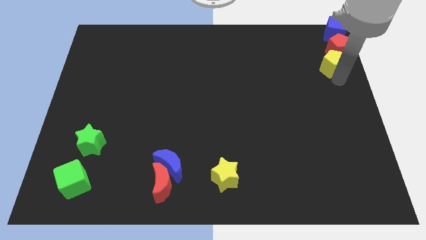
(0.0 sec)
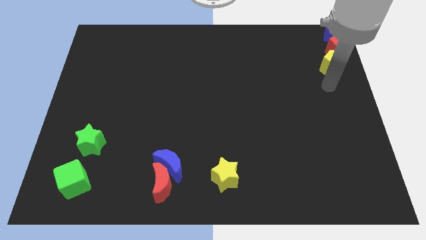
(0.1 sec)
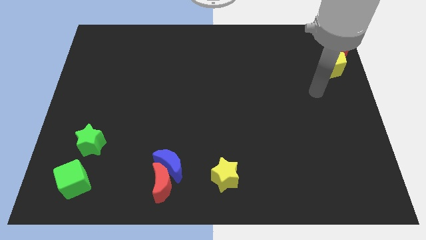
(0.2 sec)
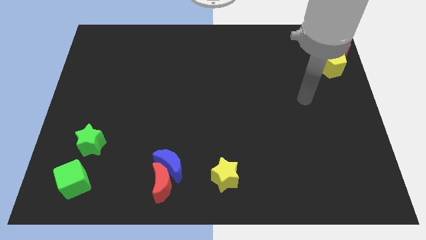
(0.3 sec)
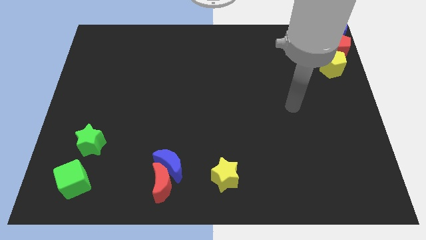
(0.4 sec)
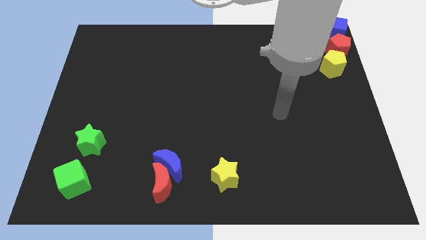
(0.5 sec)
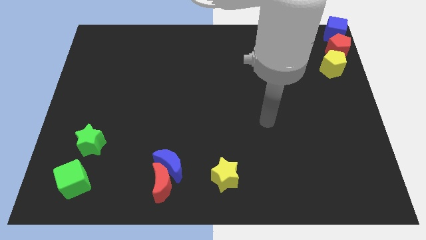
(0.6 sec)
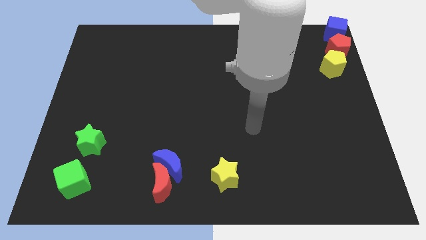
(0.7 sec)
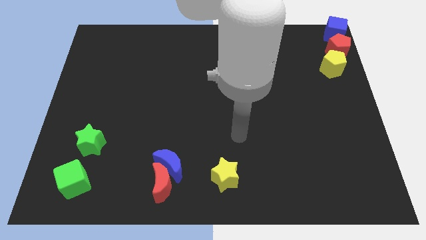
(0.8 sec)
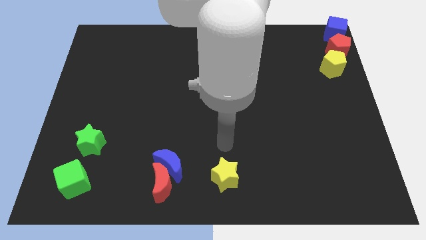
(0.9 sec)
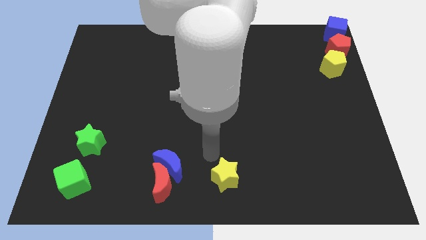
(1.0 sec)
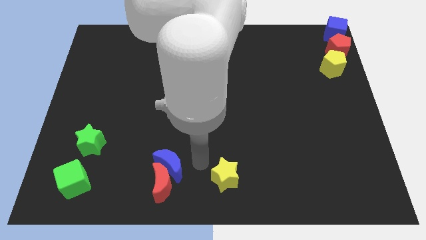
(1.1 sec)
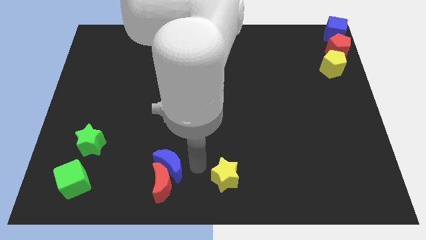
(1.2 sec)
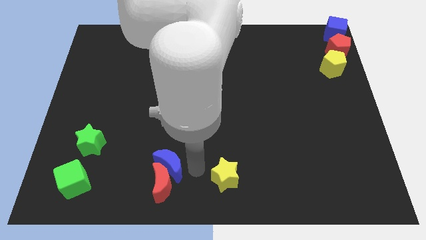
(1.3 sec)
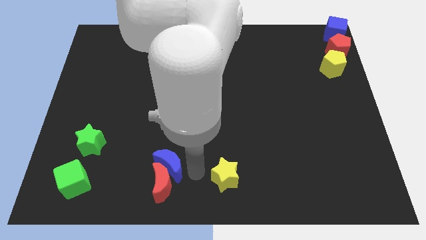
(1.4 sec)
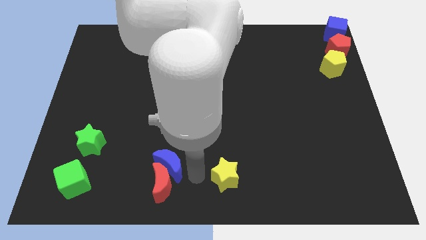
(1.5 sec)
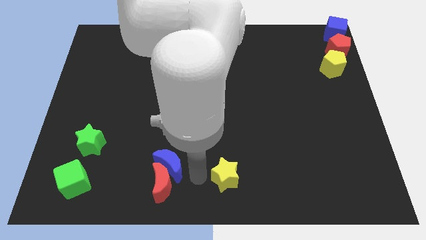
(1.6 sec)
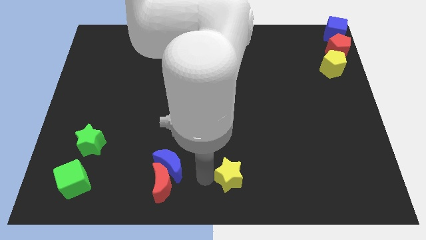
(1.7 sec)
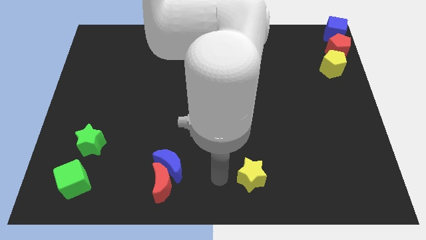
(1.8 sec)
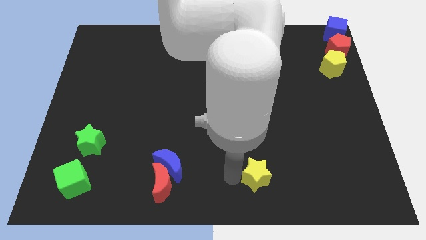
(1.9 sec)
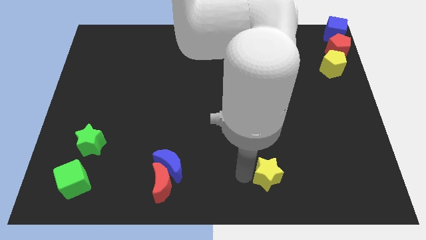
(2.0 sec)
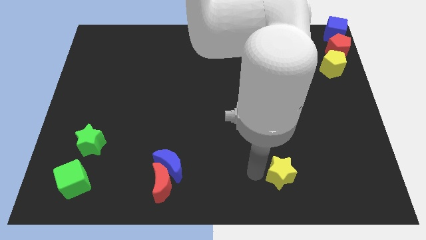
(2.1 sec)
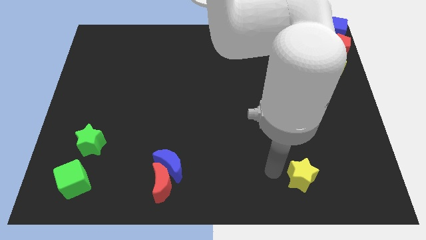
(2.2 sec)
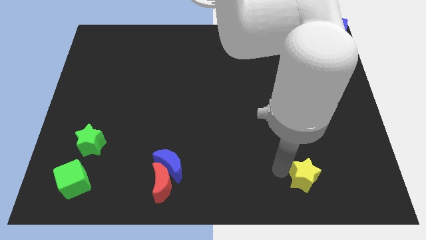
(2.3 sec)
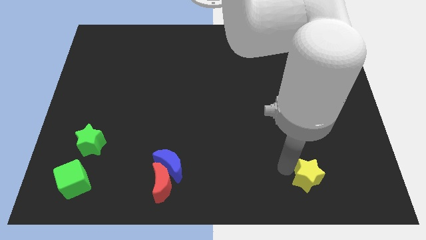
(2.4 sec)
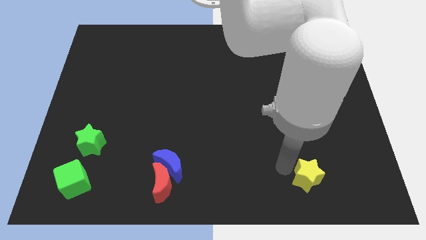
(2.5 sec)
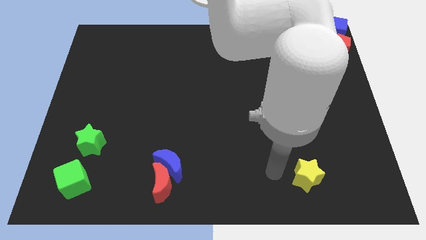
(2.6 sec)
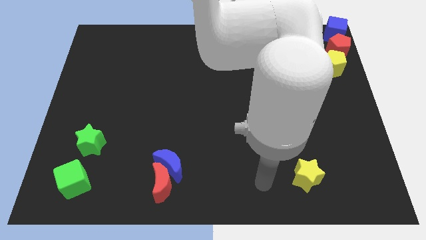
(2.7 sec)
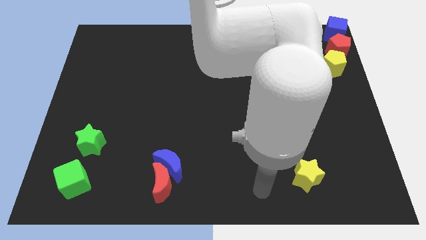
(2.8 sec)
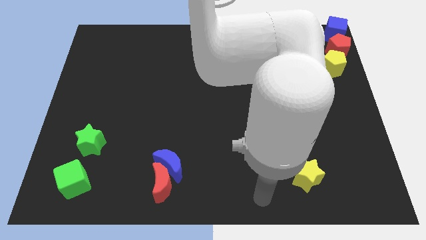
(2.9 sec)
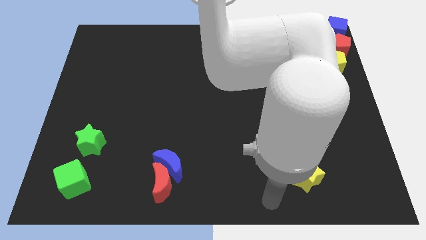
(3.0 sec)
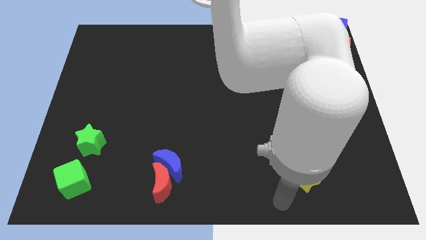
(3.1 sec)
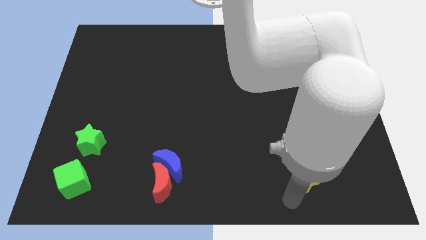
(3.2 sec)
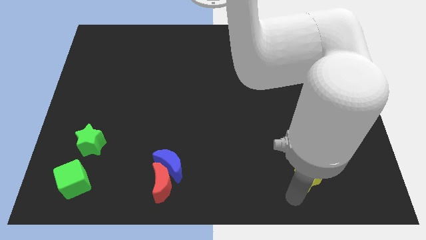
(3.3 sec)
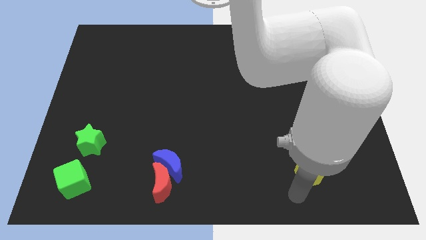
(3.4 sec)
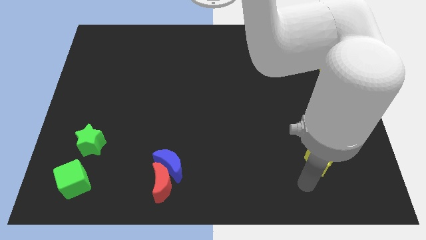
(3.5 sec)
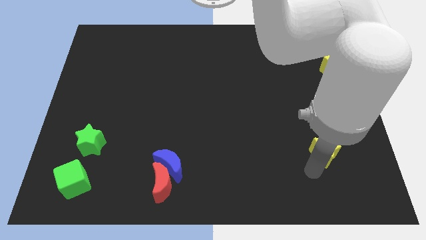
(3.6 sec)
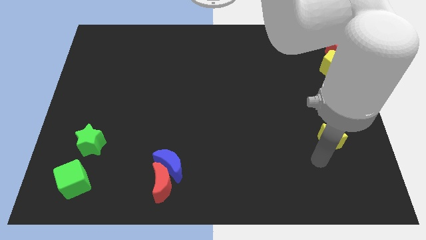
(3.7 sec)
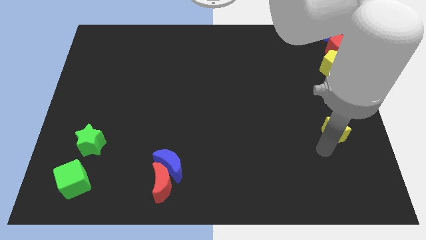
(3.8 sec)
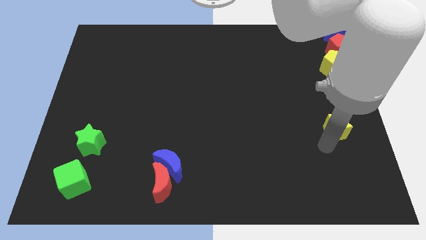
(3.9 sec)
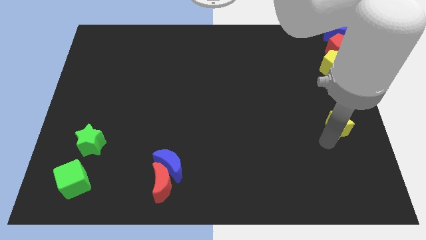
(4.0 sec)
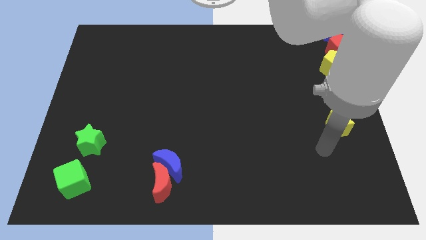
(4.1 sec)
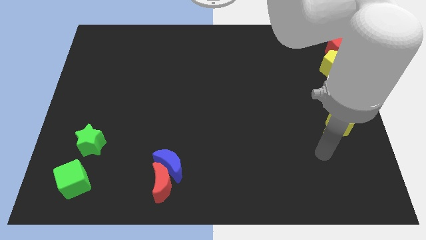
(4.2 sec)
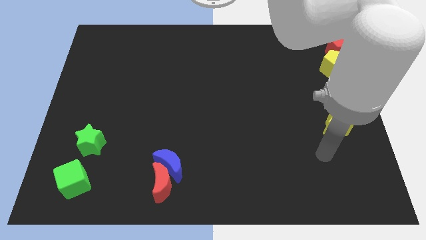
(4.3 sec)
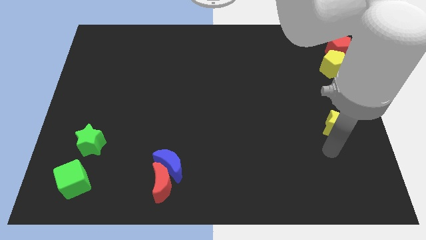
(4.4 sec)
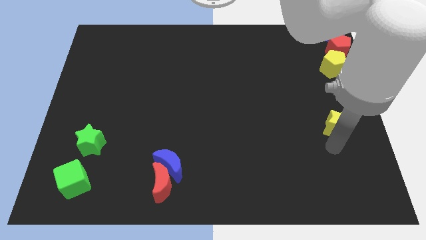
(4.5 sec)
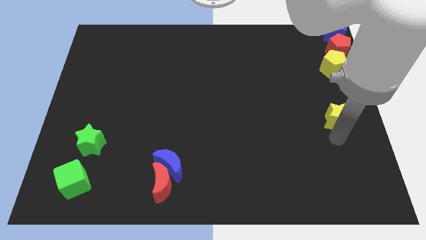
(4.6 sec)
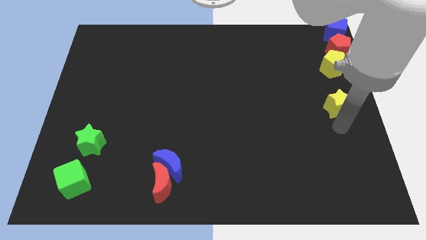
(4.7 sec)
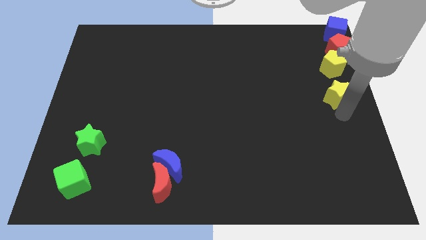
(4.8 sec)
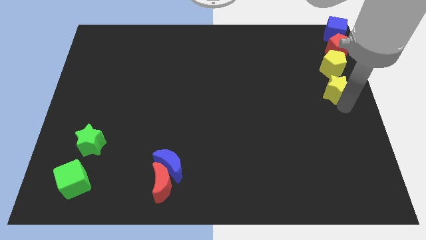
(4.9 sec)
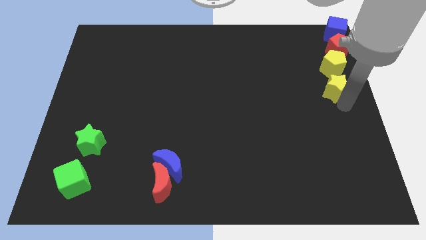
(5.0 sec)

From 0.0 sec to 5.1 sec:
place the yellow star at the bottom of yellow pentagon

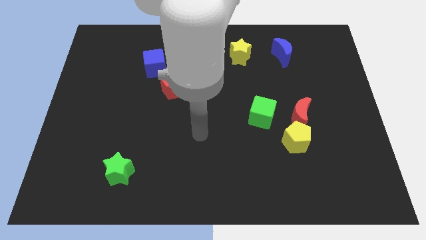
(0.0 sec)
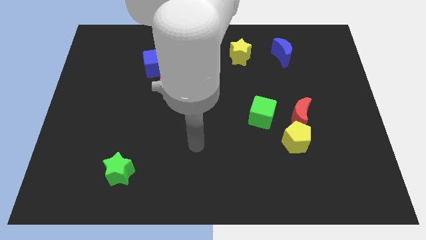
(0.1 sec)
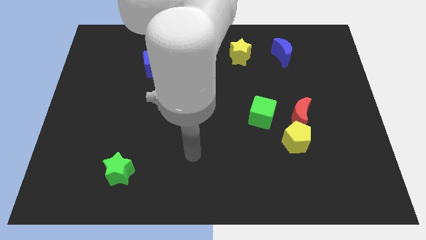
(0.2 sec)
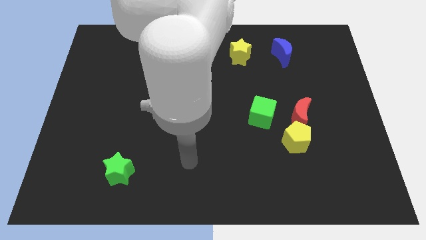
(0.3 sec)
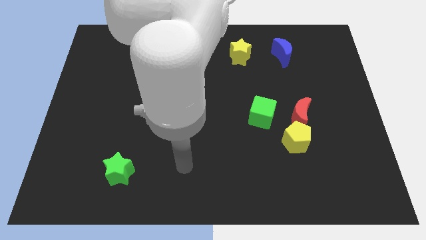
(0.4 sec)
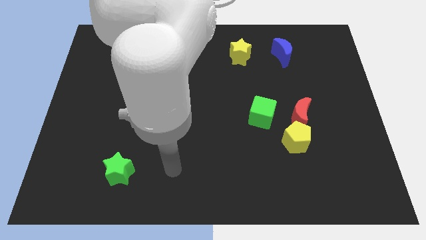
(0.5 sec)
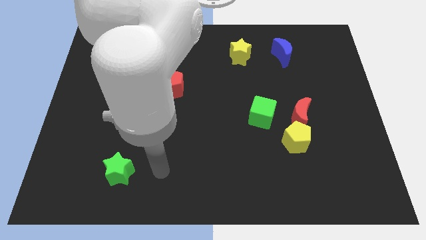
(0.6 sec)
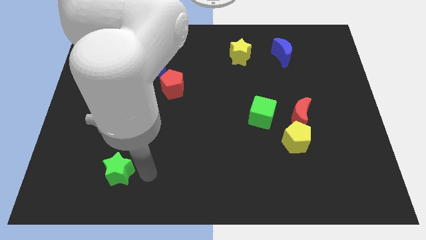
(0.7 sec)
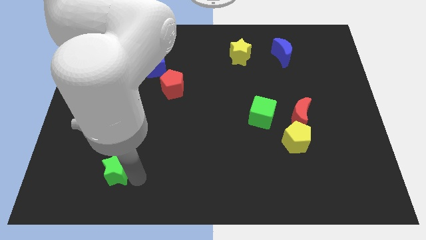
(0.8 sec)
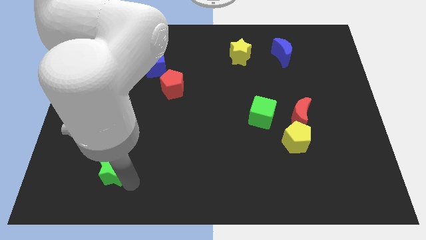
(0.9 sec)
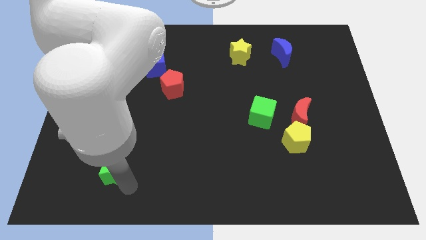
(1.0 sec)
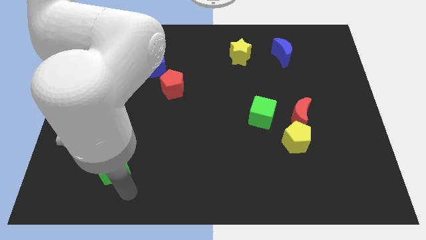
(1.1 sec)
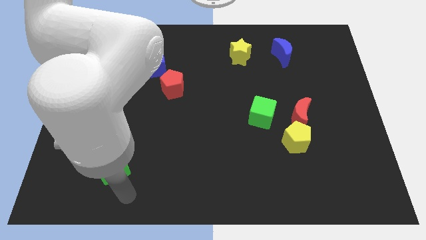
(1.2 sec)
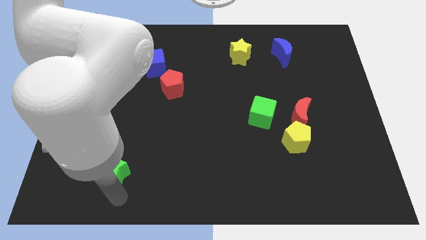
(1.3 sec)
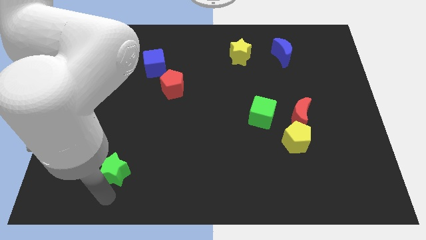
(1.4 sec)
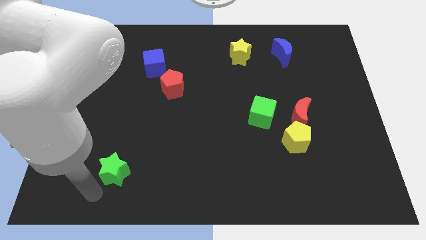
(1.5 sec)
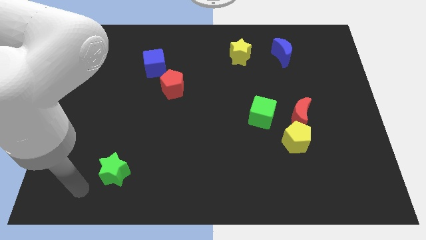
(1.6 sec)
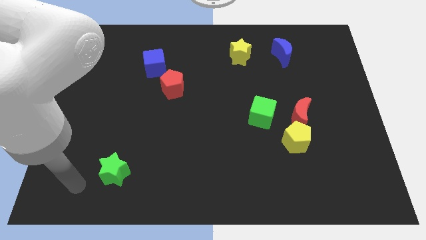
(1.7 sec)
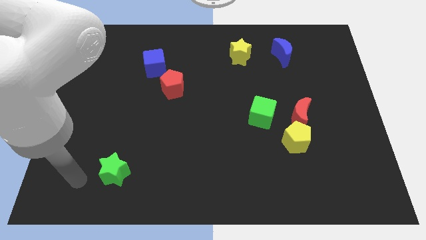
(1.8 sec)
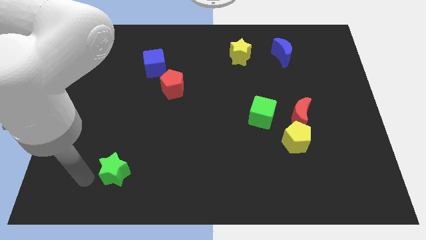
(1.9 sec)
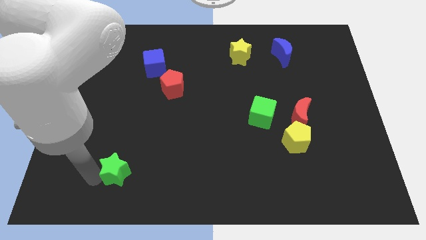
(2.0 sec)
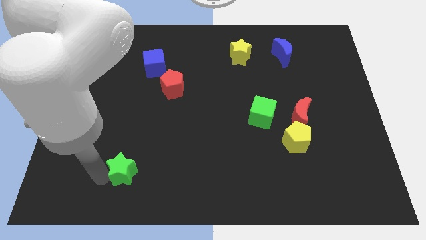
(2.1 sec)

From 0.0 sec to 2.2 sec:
point your arm at the left of the green star

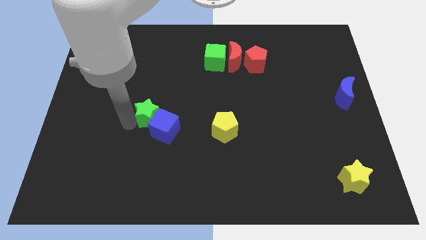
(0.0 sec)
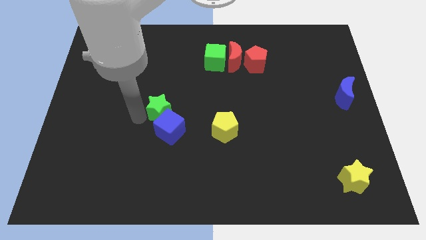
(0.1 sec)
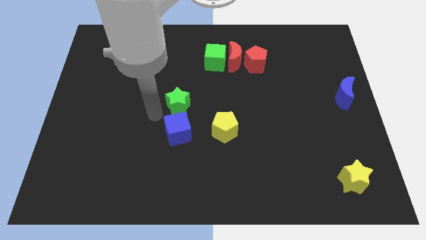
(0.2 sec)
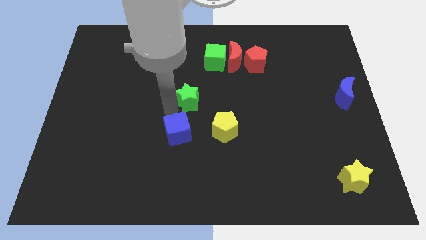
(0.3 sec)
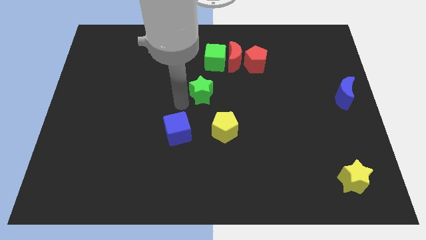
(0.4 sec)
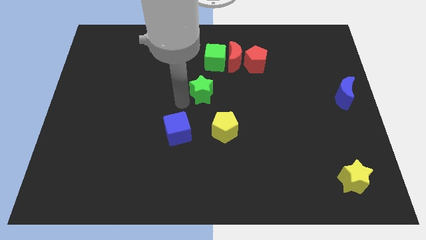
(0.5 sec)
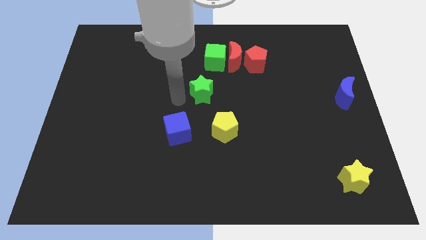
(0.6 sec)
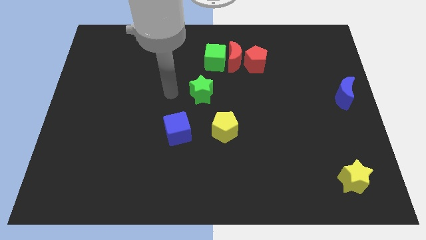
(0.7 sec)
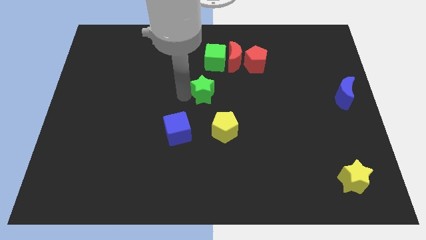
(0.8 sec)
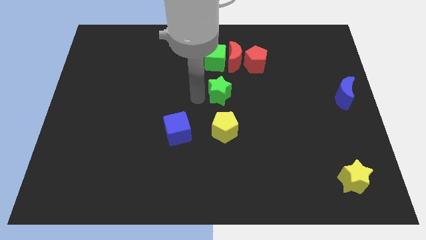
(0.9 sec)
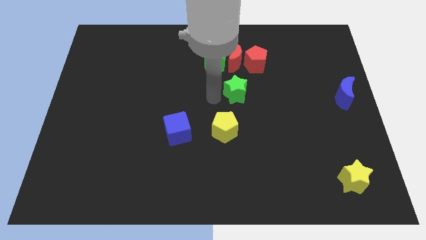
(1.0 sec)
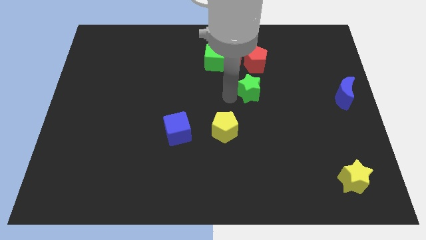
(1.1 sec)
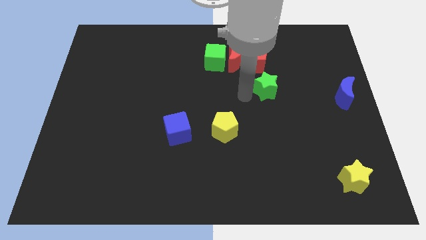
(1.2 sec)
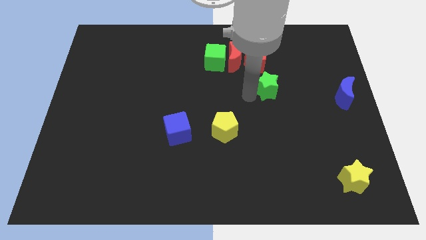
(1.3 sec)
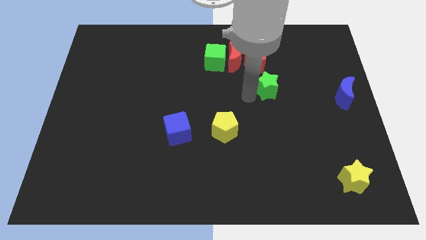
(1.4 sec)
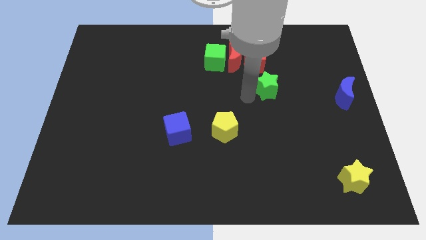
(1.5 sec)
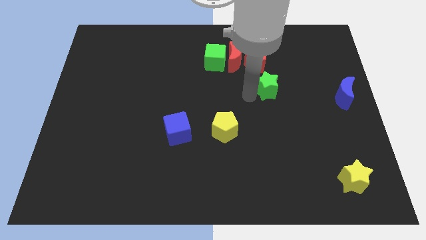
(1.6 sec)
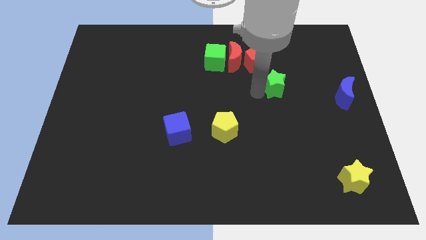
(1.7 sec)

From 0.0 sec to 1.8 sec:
separate the green star from the blue cube
